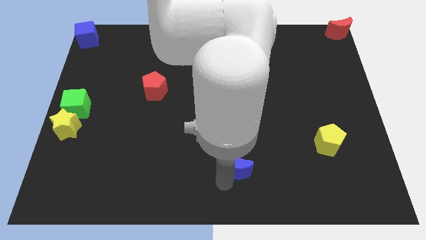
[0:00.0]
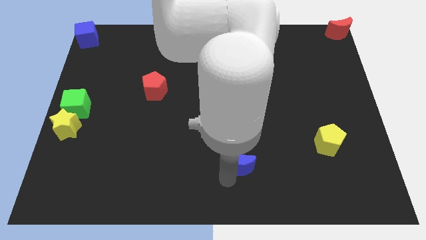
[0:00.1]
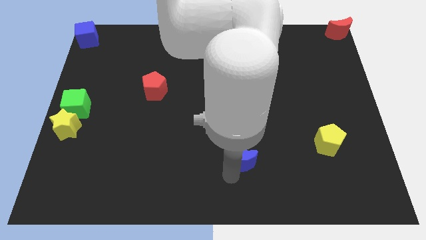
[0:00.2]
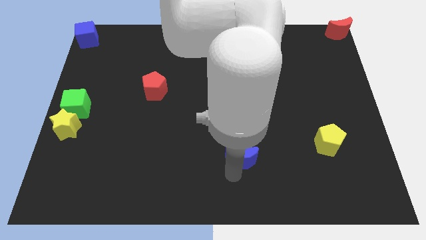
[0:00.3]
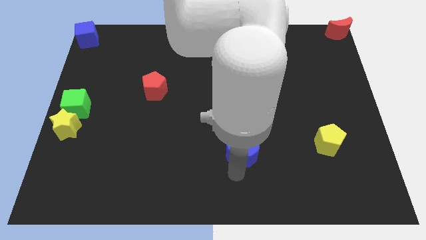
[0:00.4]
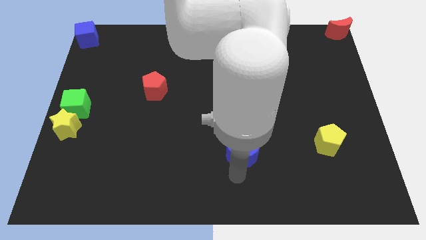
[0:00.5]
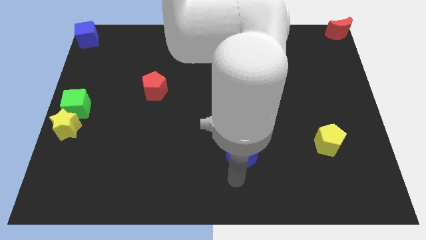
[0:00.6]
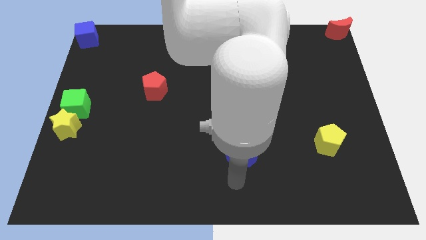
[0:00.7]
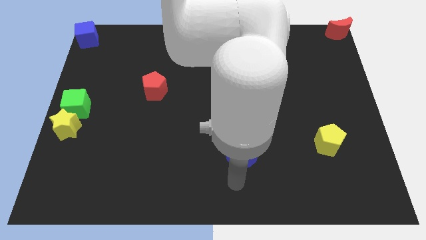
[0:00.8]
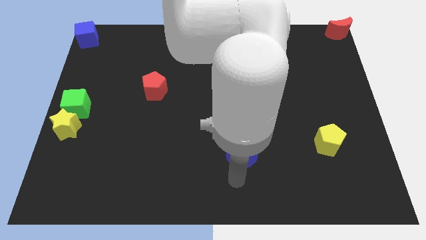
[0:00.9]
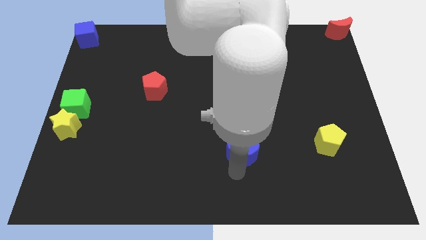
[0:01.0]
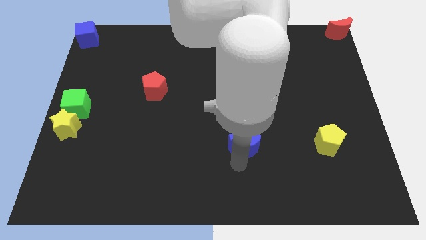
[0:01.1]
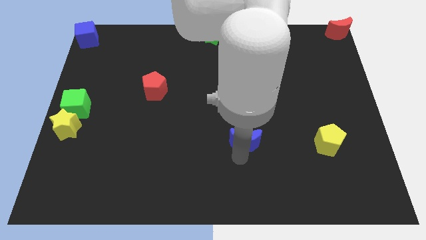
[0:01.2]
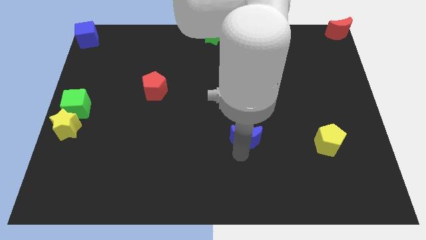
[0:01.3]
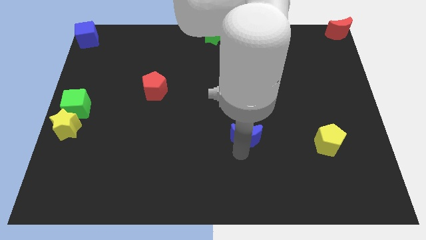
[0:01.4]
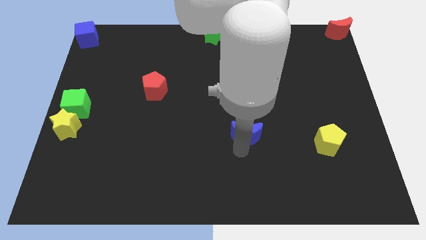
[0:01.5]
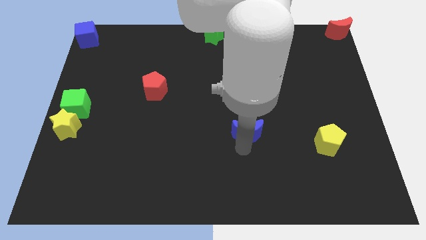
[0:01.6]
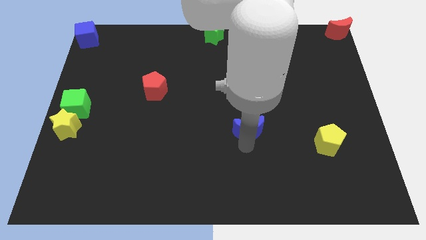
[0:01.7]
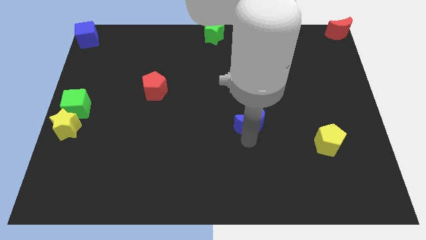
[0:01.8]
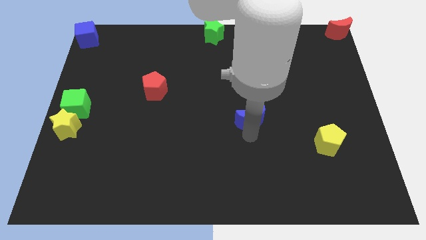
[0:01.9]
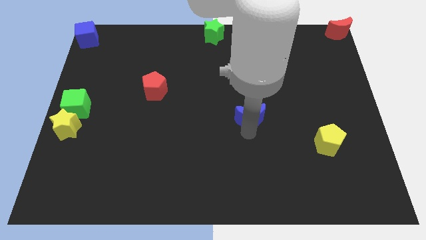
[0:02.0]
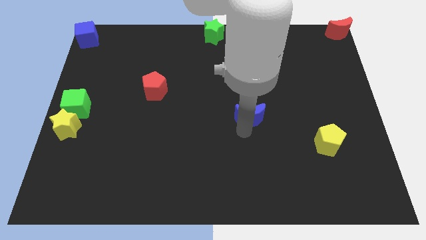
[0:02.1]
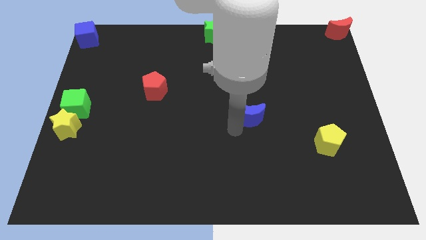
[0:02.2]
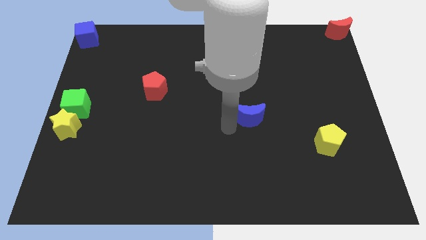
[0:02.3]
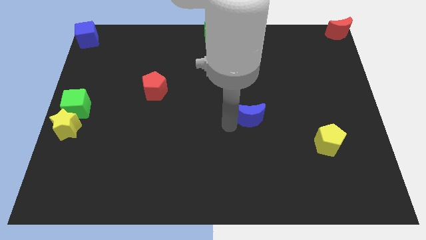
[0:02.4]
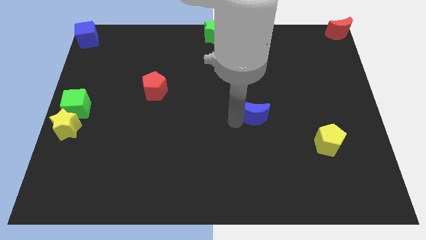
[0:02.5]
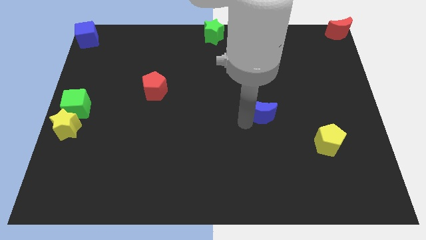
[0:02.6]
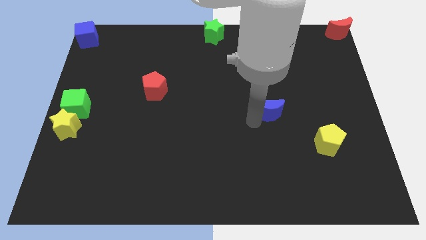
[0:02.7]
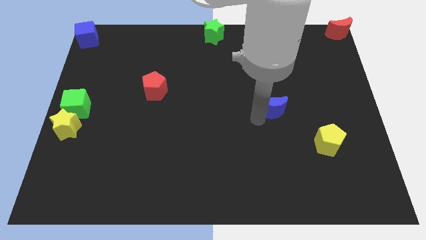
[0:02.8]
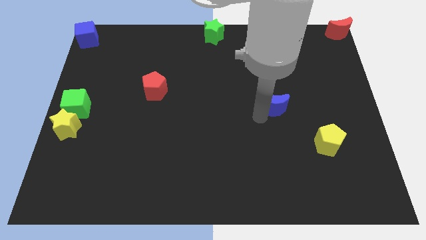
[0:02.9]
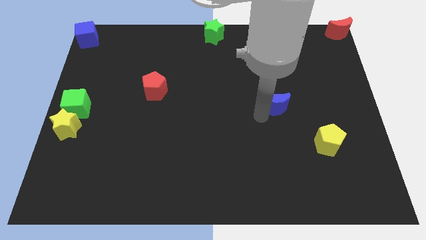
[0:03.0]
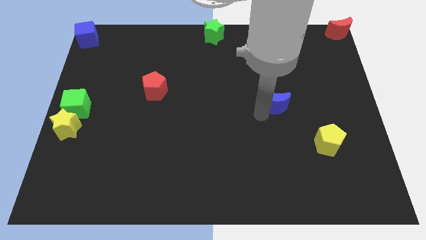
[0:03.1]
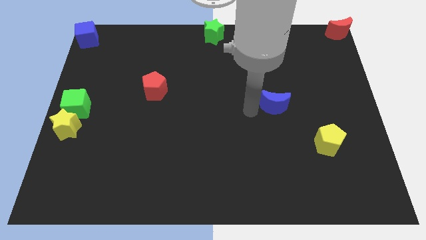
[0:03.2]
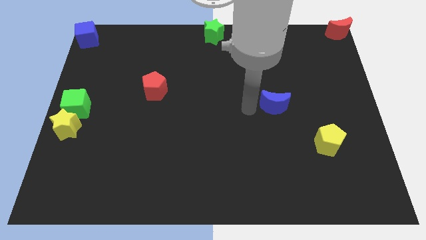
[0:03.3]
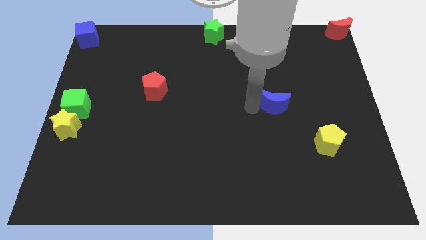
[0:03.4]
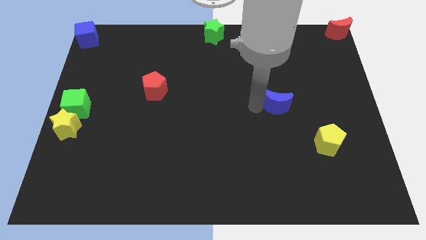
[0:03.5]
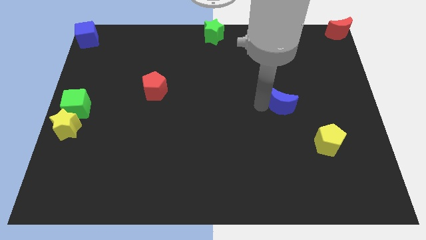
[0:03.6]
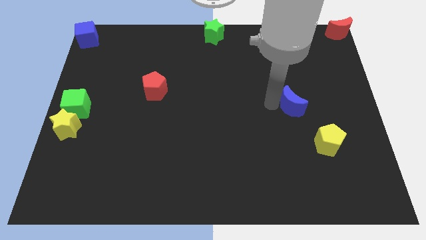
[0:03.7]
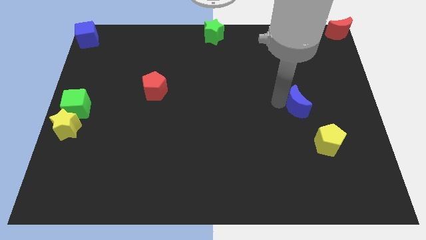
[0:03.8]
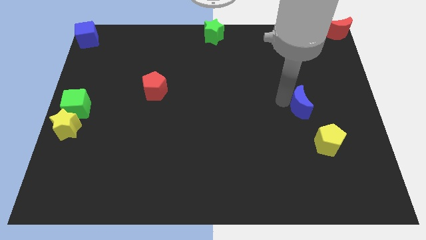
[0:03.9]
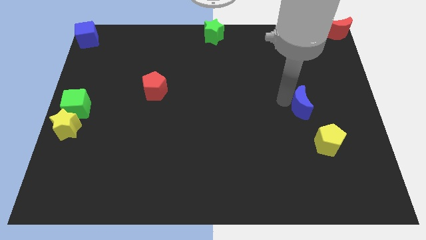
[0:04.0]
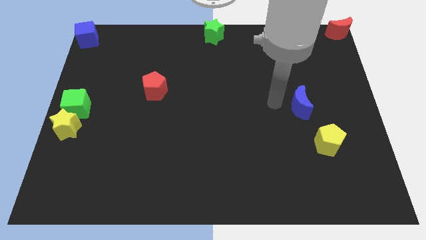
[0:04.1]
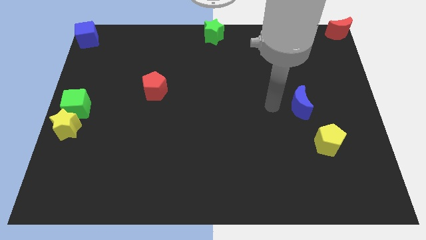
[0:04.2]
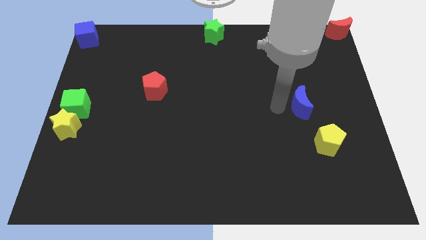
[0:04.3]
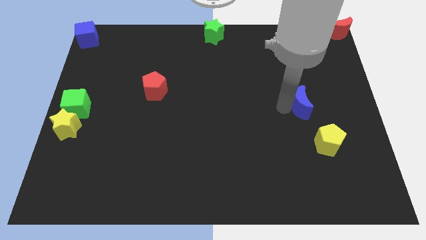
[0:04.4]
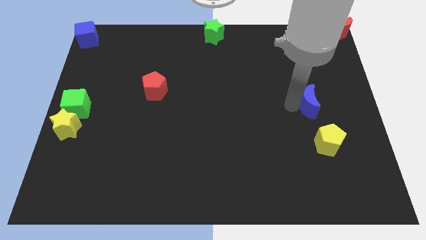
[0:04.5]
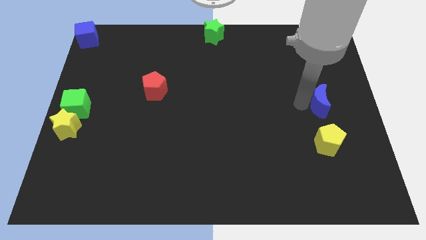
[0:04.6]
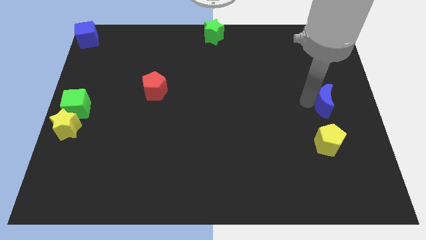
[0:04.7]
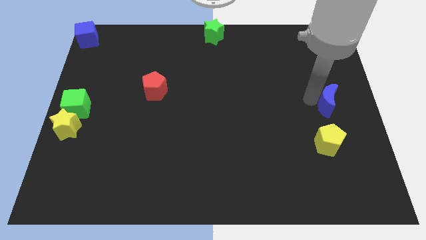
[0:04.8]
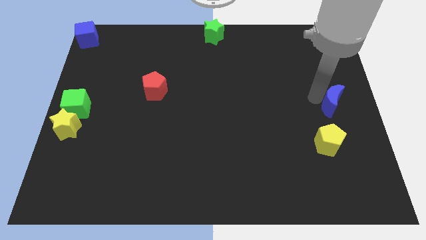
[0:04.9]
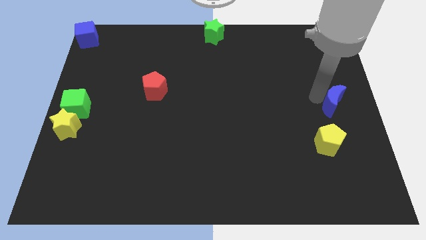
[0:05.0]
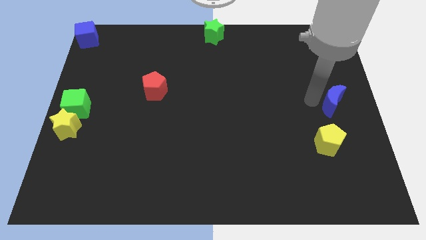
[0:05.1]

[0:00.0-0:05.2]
drag blue moon above yellow pentagon

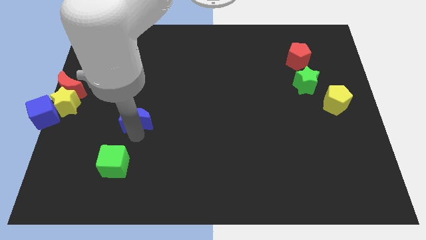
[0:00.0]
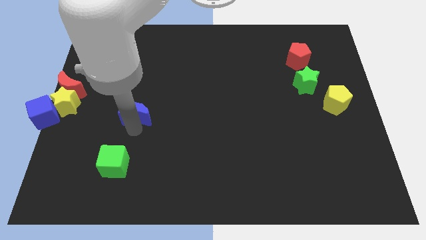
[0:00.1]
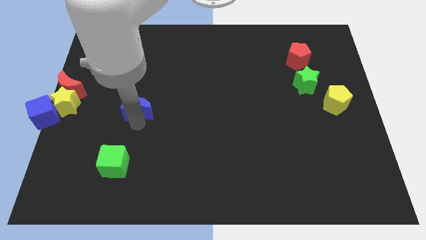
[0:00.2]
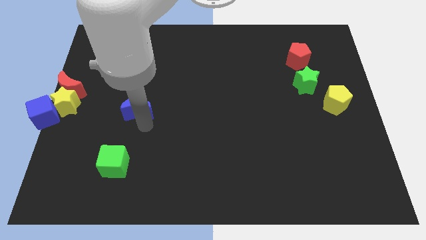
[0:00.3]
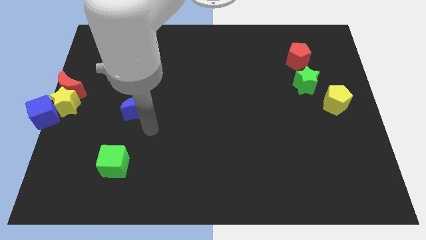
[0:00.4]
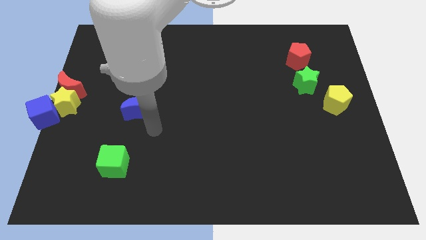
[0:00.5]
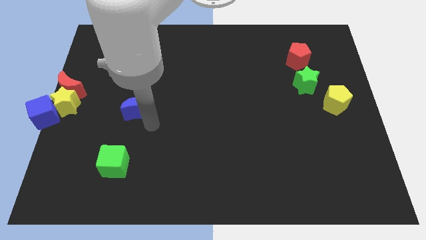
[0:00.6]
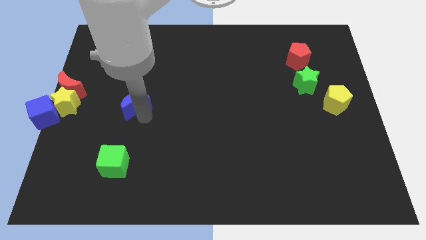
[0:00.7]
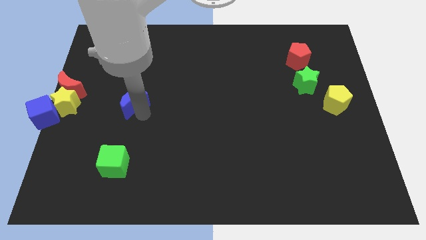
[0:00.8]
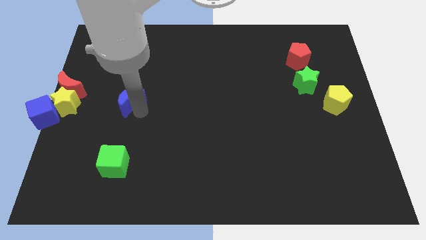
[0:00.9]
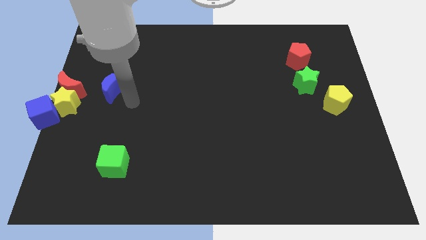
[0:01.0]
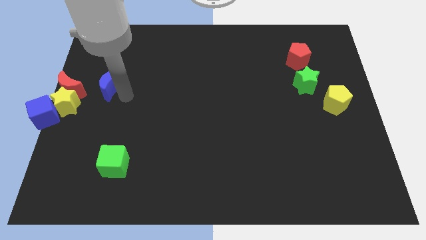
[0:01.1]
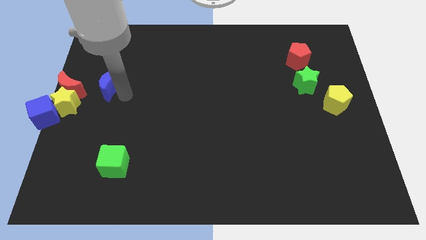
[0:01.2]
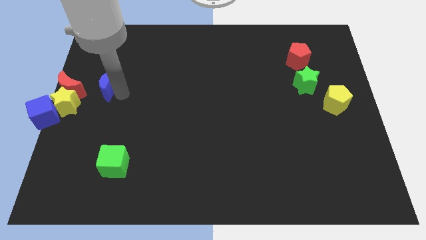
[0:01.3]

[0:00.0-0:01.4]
slide the blue crescent to the right side of the red moon

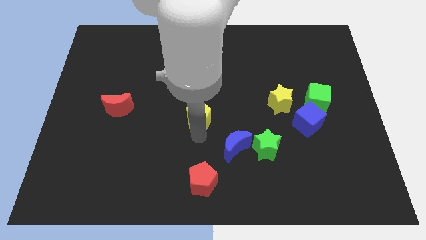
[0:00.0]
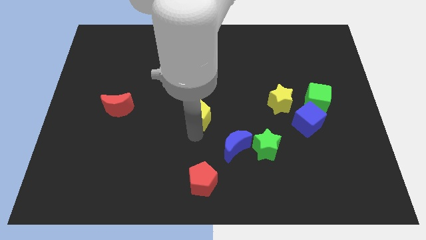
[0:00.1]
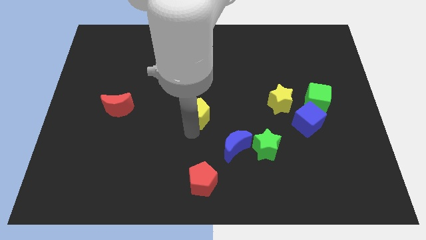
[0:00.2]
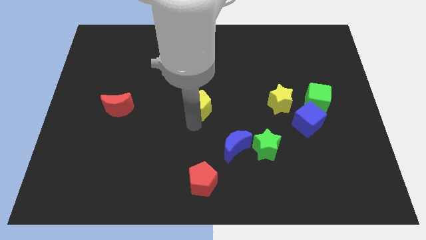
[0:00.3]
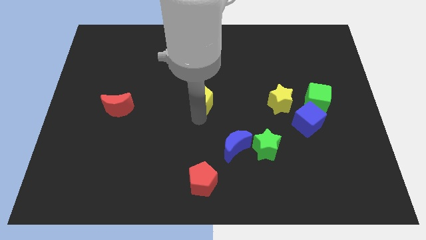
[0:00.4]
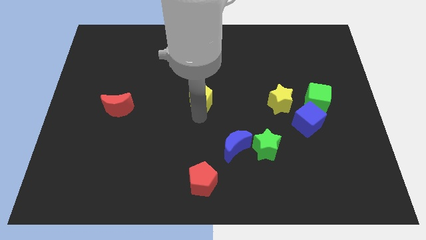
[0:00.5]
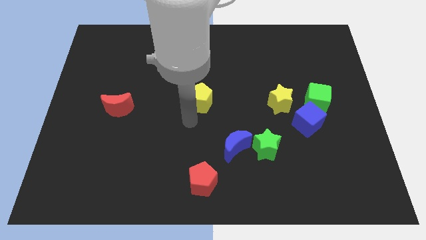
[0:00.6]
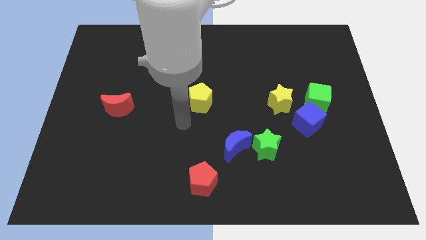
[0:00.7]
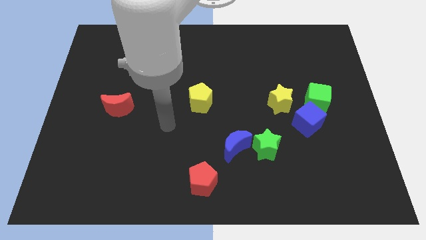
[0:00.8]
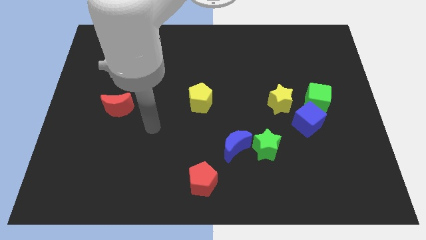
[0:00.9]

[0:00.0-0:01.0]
move the yellow pentagon to the center of the board

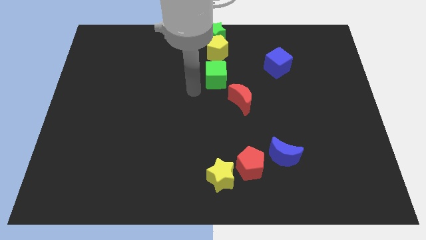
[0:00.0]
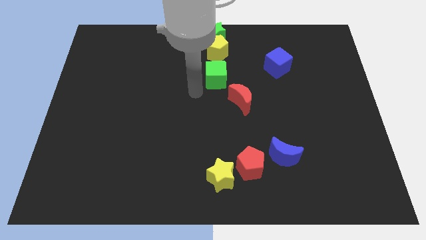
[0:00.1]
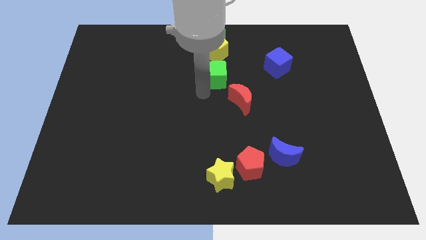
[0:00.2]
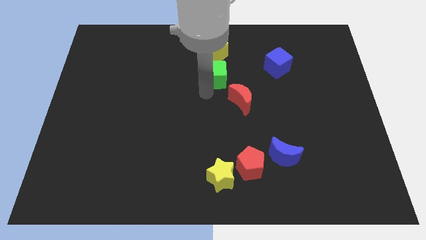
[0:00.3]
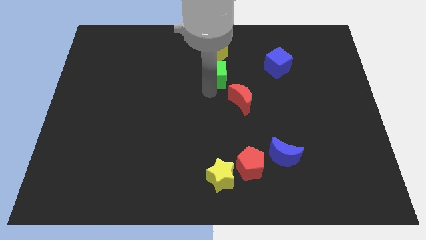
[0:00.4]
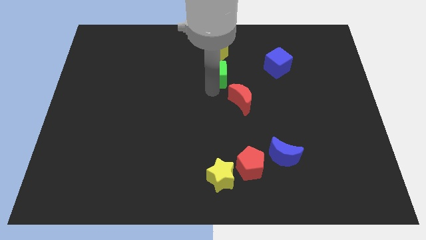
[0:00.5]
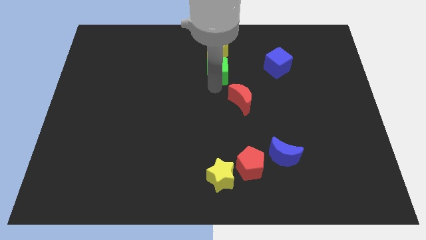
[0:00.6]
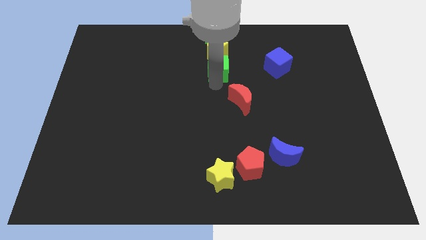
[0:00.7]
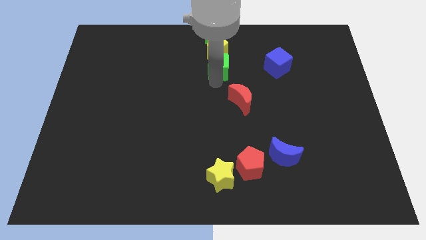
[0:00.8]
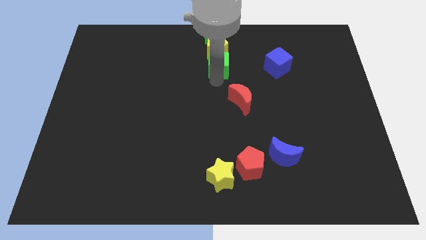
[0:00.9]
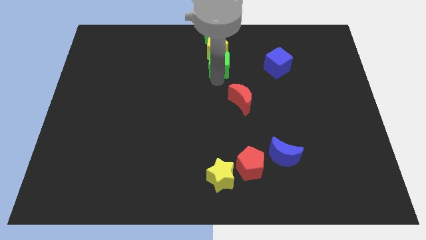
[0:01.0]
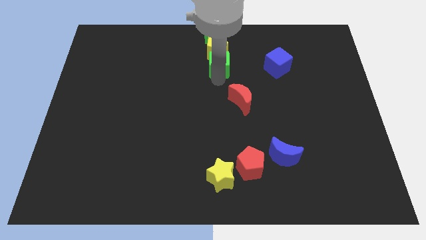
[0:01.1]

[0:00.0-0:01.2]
push the green cube close to the yellow pentagon
